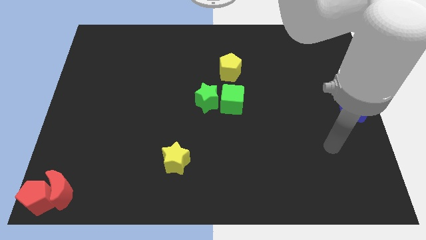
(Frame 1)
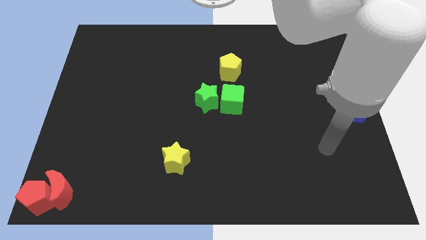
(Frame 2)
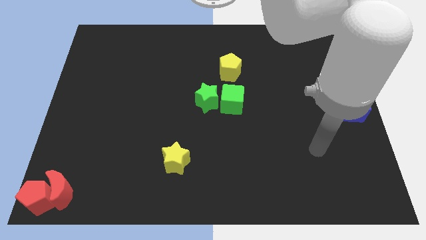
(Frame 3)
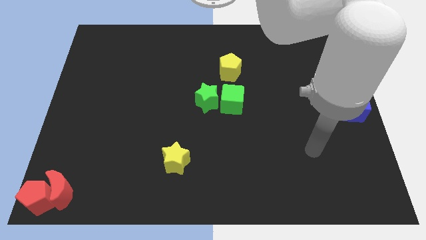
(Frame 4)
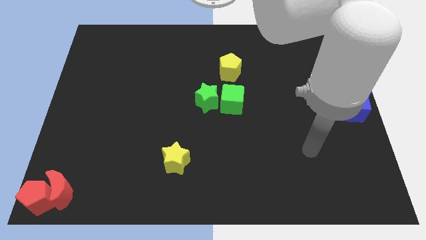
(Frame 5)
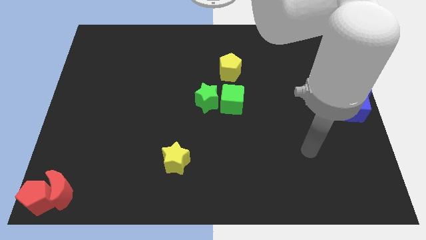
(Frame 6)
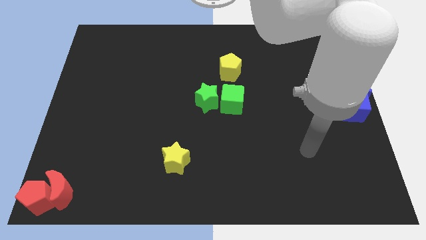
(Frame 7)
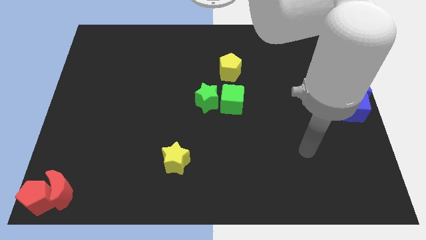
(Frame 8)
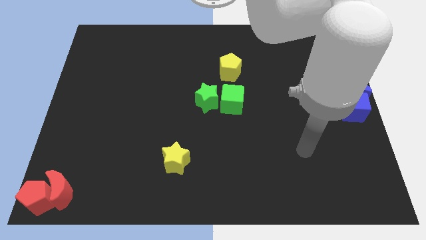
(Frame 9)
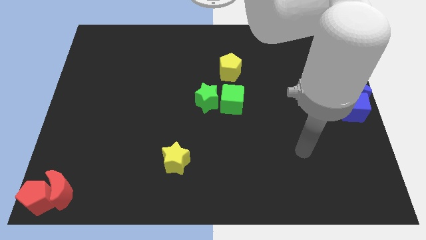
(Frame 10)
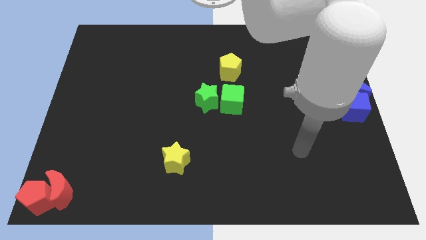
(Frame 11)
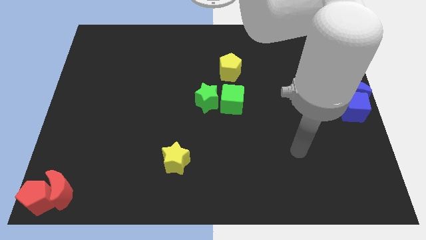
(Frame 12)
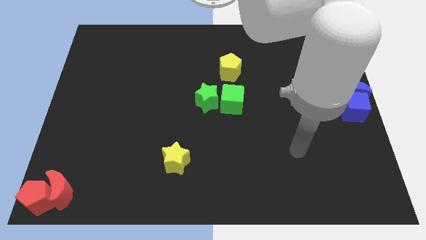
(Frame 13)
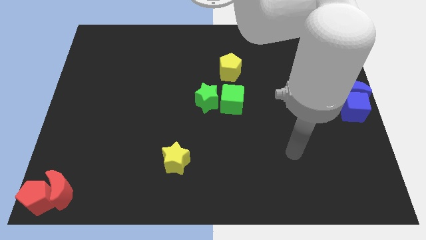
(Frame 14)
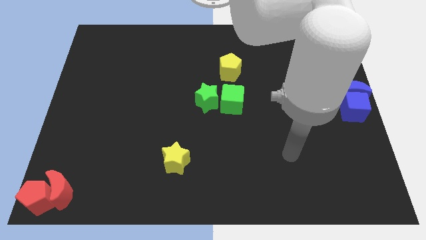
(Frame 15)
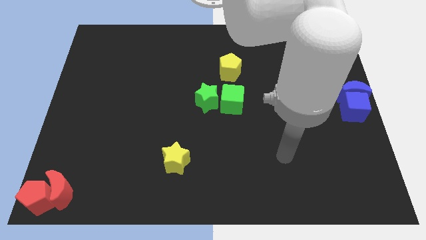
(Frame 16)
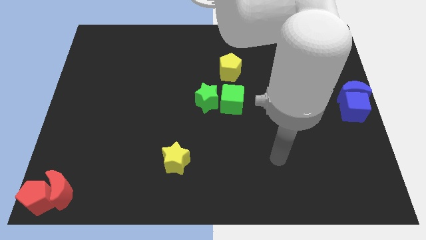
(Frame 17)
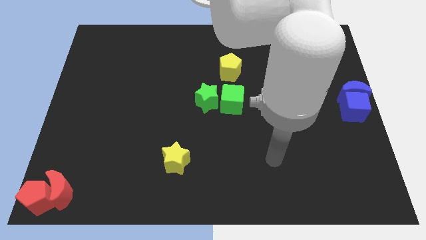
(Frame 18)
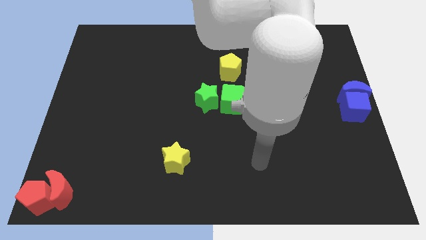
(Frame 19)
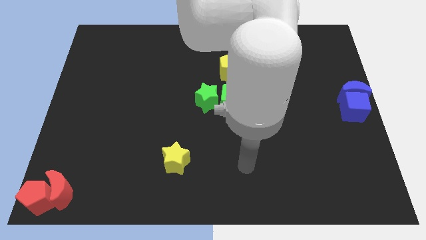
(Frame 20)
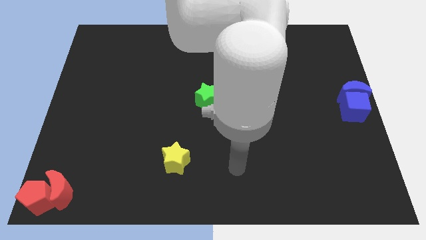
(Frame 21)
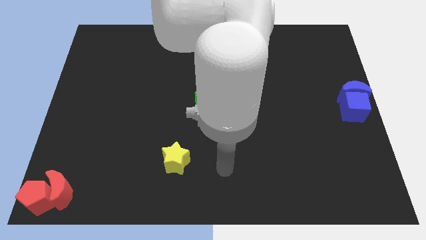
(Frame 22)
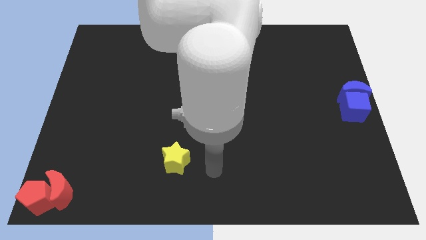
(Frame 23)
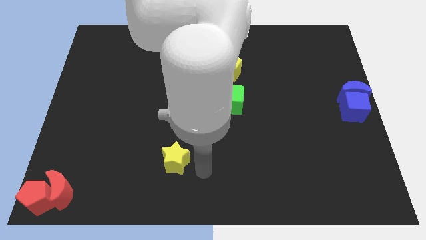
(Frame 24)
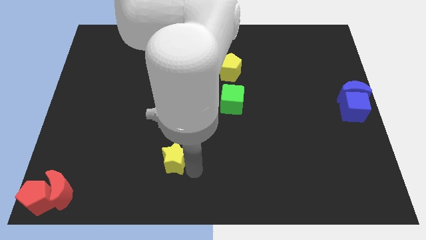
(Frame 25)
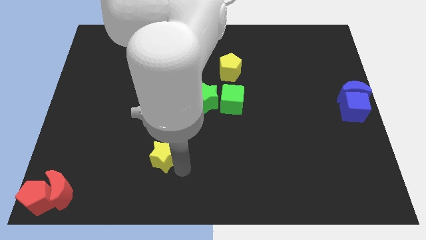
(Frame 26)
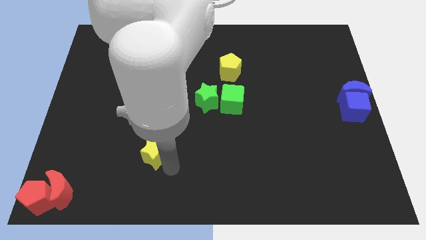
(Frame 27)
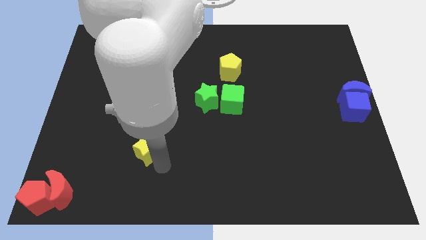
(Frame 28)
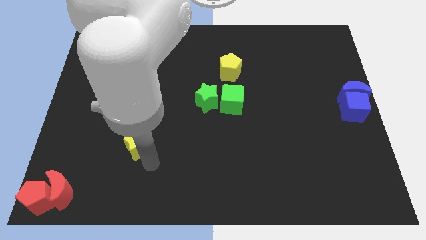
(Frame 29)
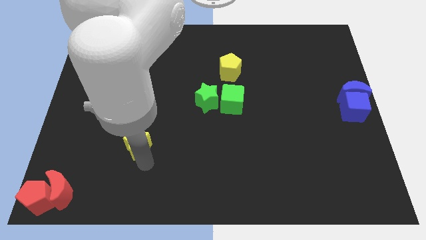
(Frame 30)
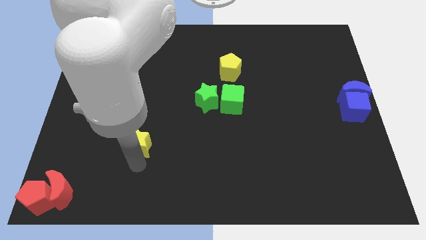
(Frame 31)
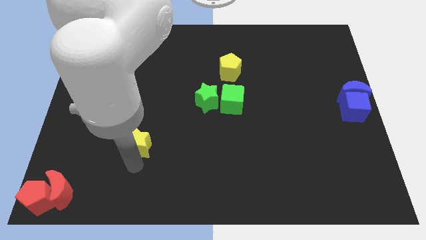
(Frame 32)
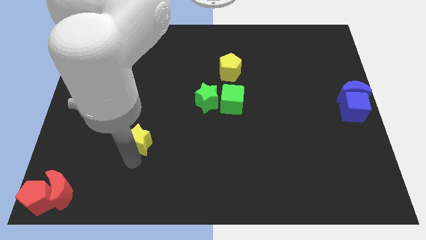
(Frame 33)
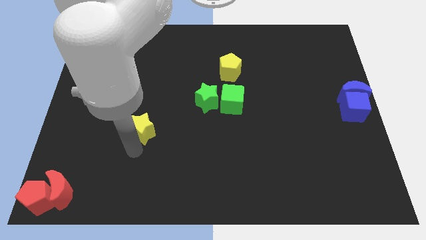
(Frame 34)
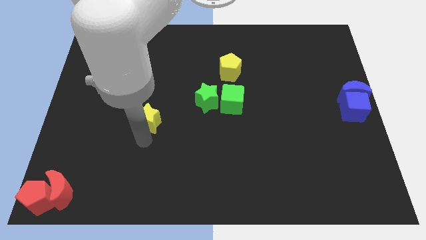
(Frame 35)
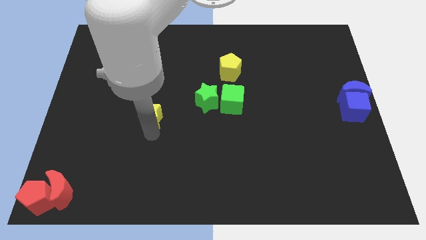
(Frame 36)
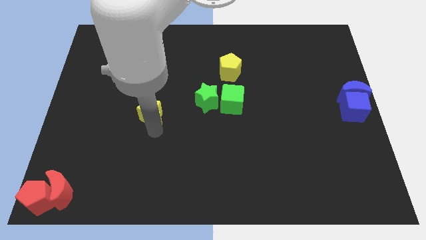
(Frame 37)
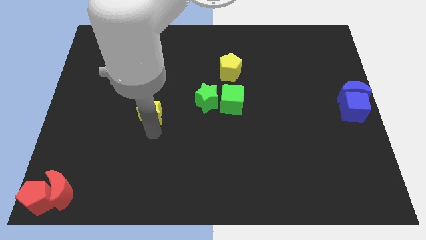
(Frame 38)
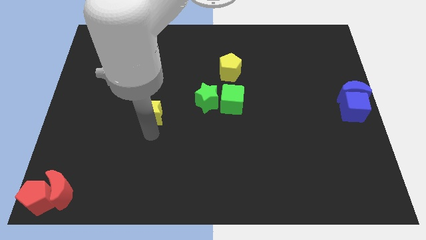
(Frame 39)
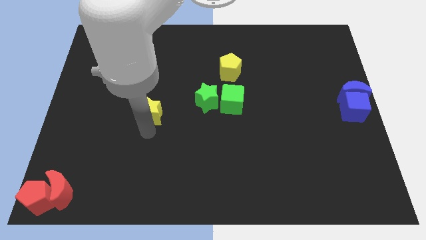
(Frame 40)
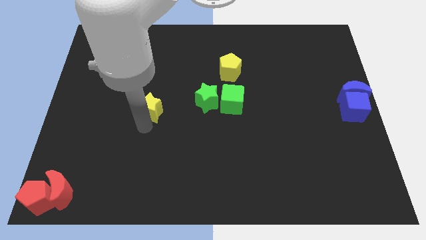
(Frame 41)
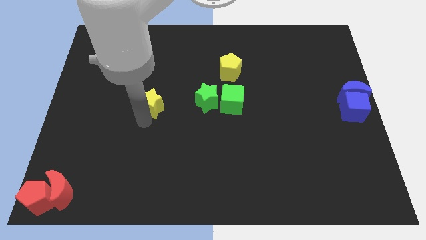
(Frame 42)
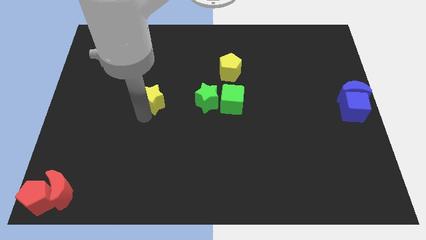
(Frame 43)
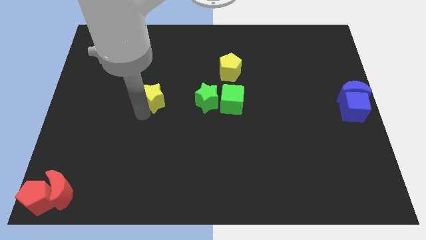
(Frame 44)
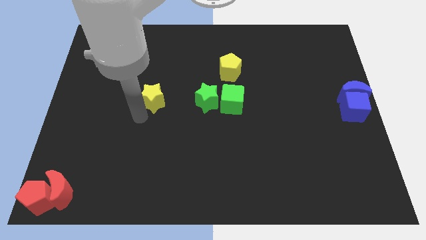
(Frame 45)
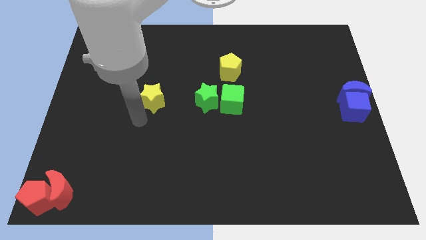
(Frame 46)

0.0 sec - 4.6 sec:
move the yellow star to the left of the green star

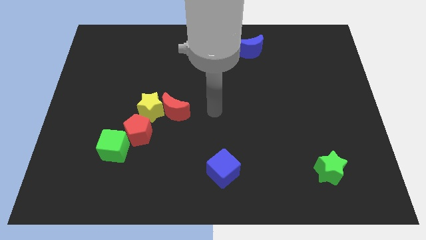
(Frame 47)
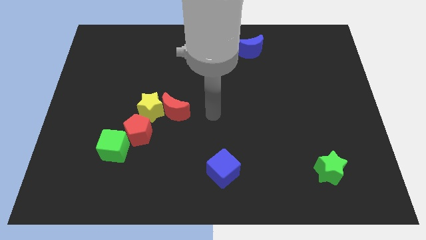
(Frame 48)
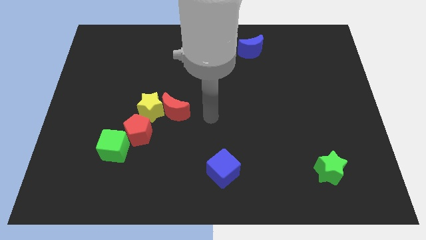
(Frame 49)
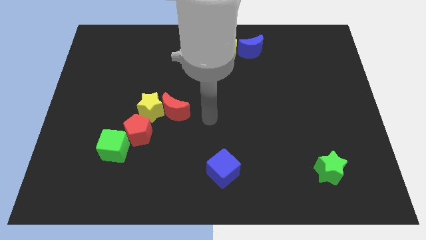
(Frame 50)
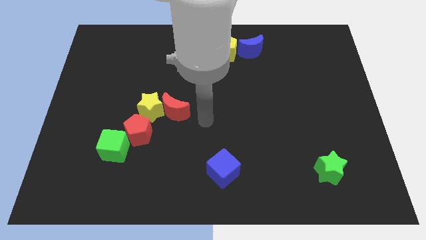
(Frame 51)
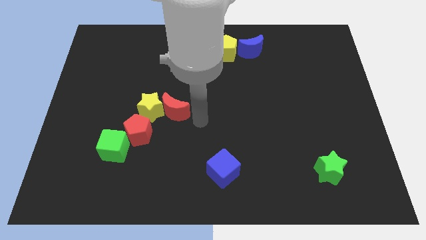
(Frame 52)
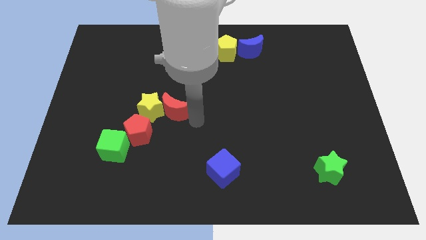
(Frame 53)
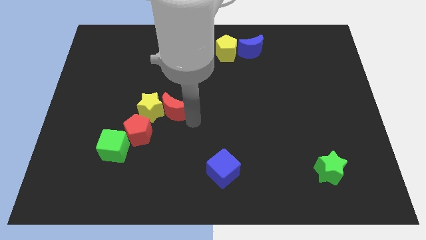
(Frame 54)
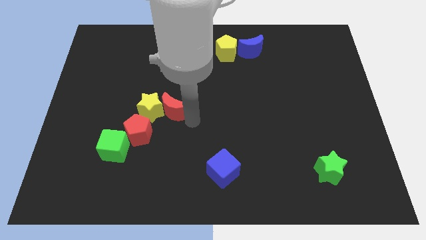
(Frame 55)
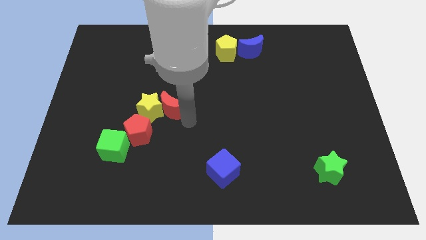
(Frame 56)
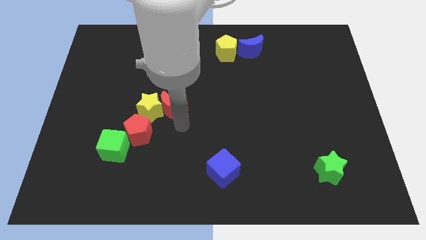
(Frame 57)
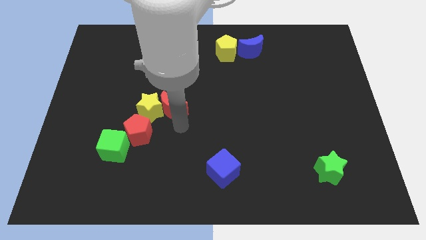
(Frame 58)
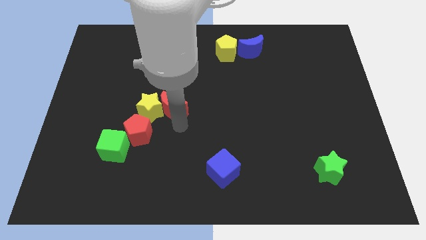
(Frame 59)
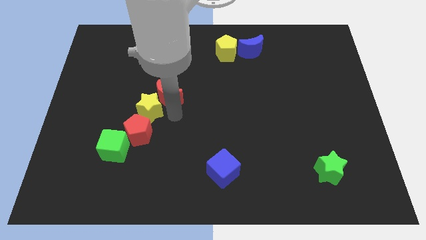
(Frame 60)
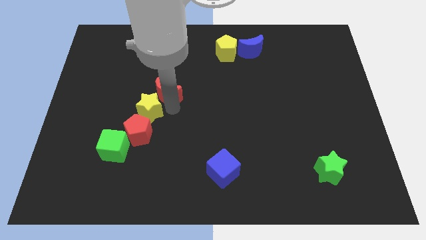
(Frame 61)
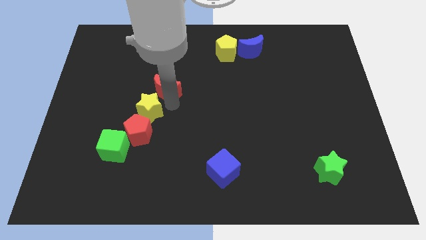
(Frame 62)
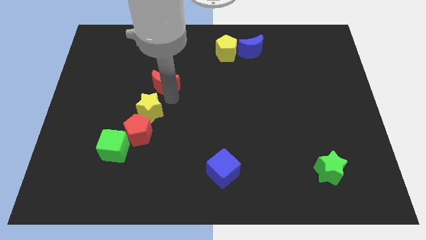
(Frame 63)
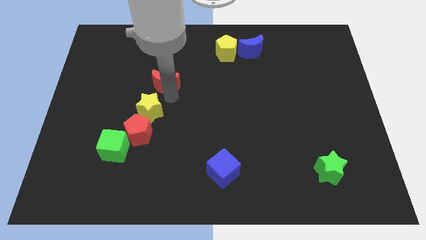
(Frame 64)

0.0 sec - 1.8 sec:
push the red crescent right above yellow star

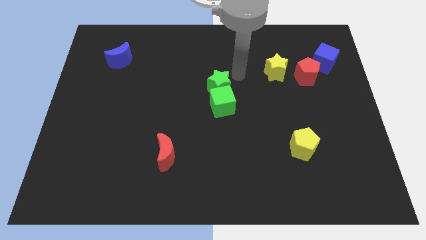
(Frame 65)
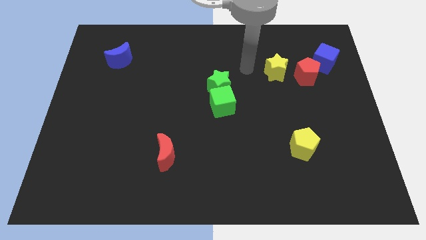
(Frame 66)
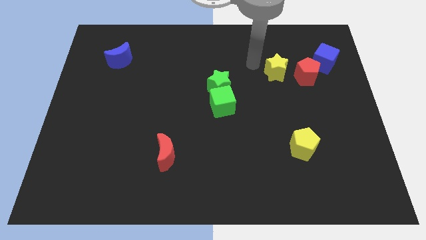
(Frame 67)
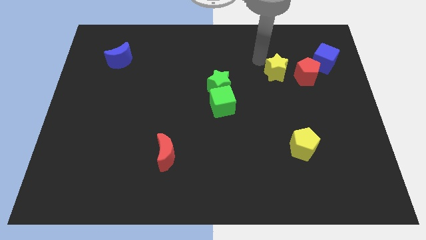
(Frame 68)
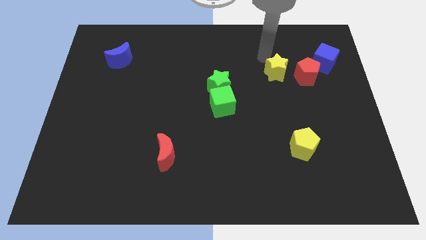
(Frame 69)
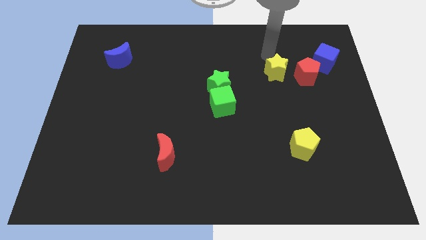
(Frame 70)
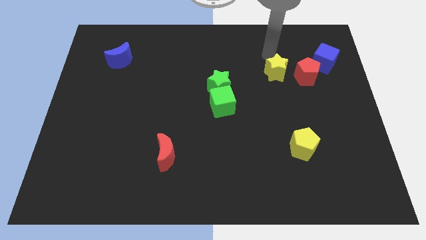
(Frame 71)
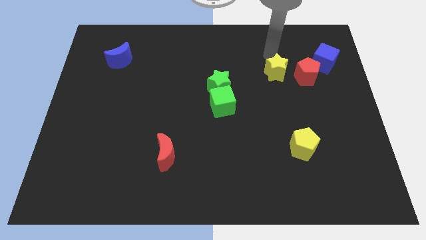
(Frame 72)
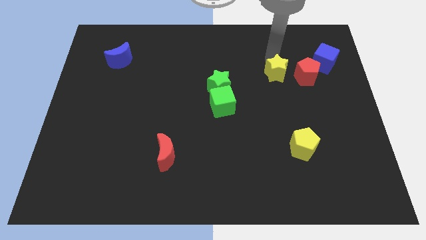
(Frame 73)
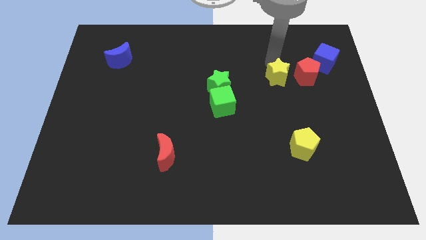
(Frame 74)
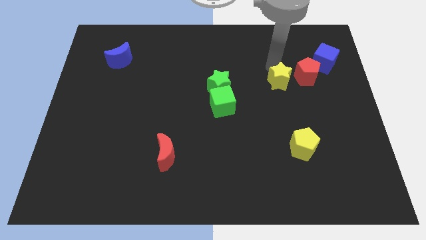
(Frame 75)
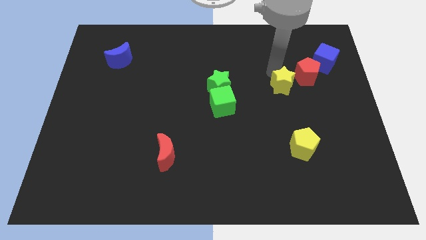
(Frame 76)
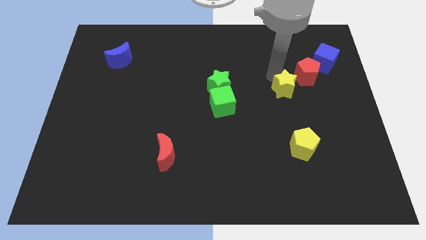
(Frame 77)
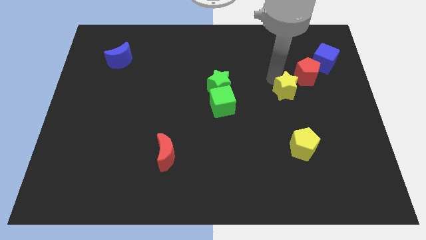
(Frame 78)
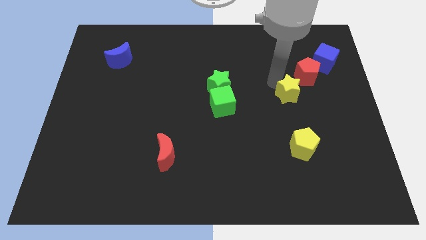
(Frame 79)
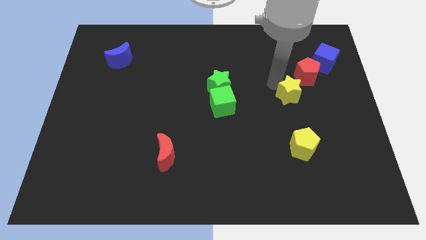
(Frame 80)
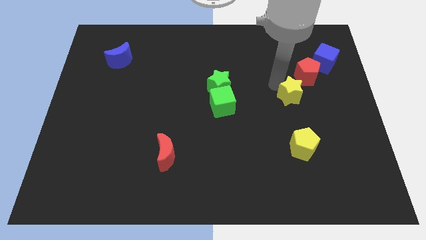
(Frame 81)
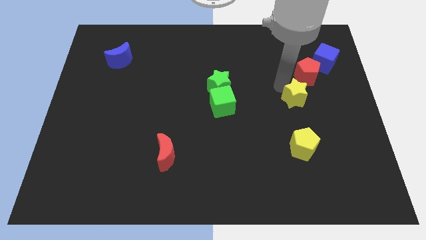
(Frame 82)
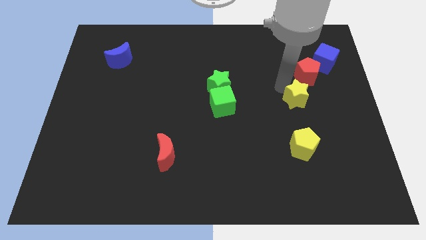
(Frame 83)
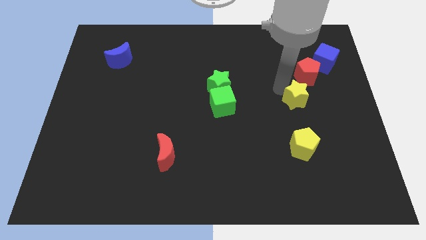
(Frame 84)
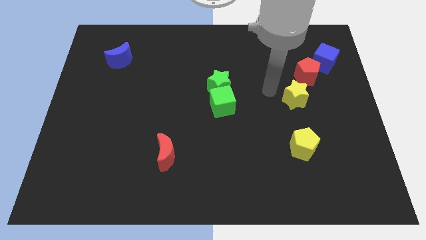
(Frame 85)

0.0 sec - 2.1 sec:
slide the yellow star at the bottom left of the red pentagon

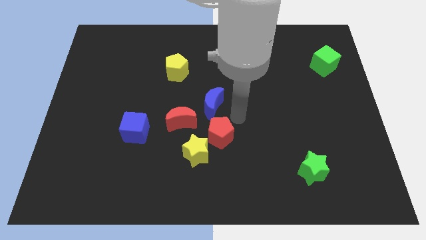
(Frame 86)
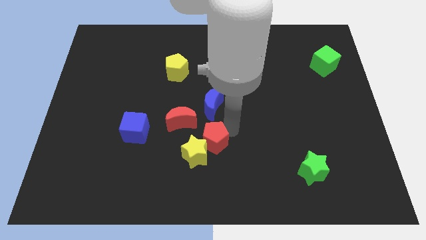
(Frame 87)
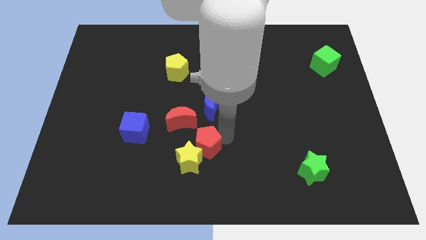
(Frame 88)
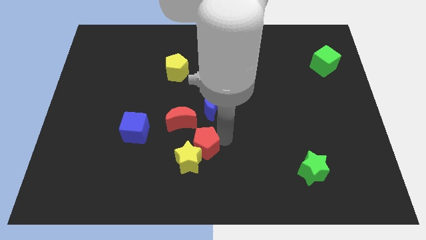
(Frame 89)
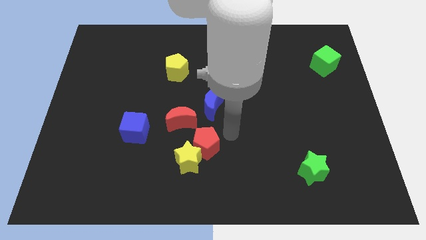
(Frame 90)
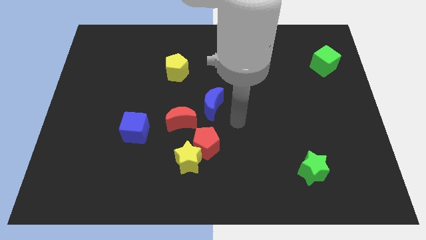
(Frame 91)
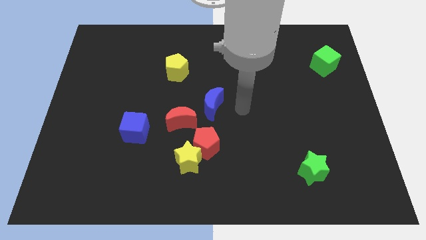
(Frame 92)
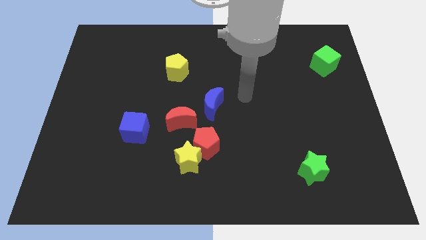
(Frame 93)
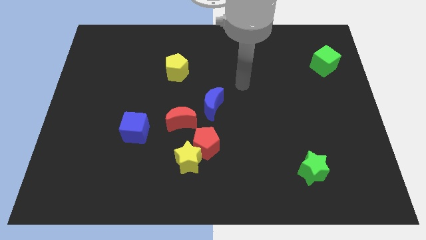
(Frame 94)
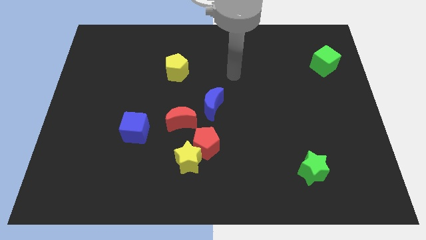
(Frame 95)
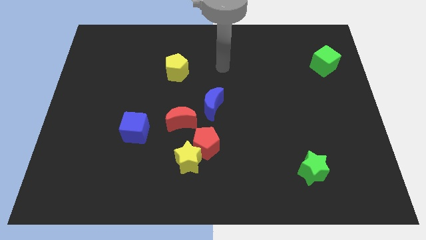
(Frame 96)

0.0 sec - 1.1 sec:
push the red pentagon into the yellow star
